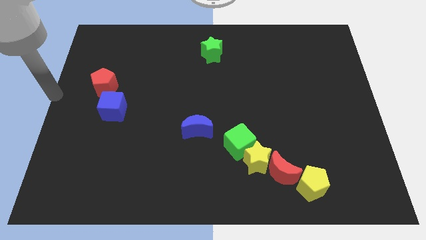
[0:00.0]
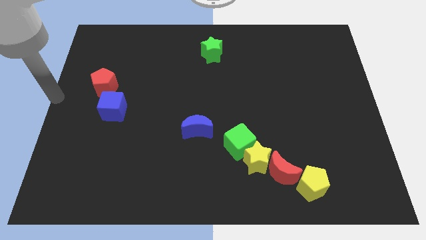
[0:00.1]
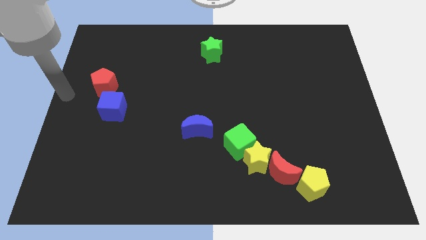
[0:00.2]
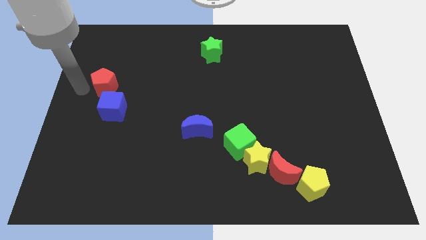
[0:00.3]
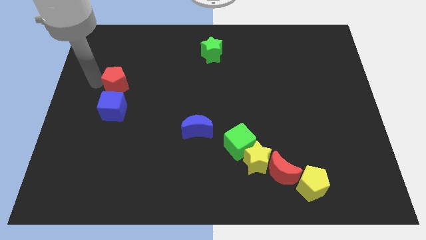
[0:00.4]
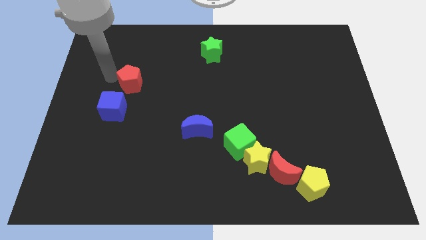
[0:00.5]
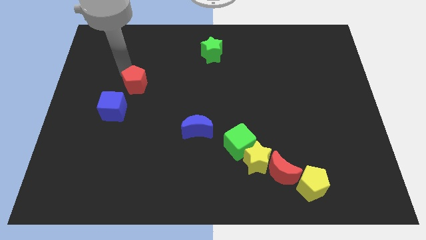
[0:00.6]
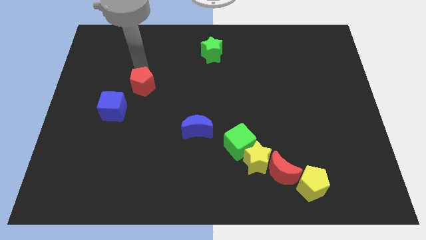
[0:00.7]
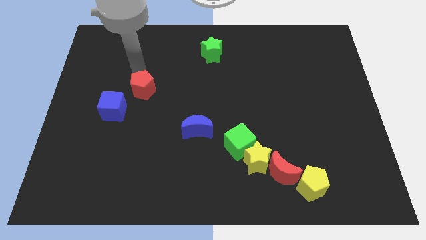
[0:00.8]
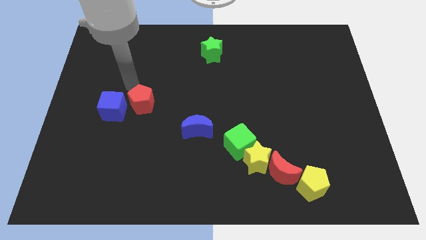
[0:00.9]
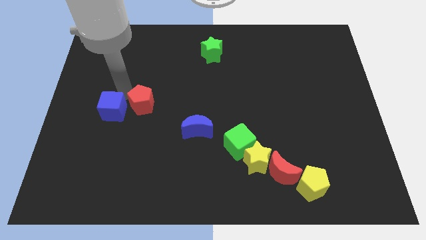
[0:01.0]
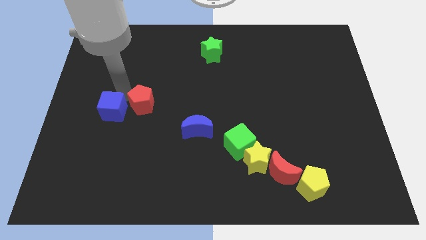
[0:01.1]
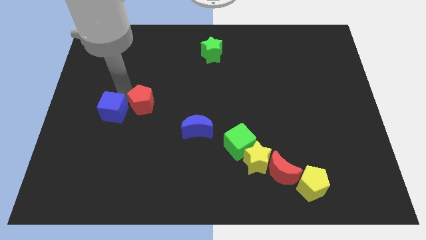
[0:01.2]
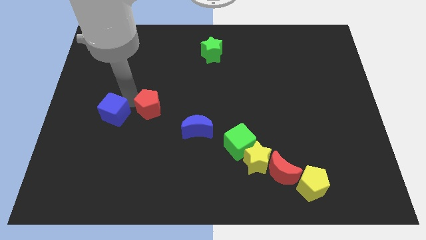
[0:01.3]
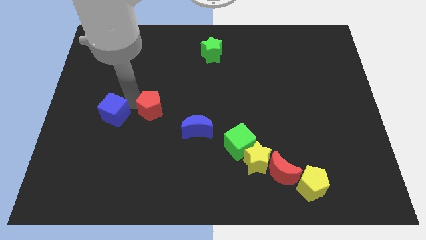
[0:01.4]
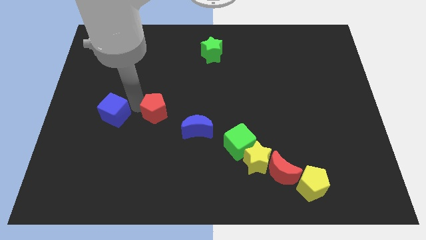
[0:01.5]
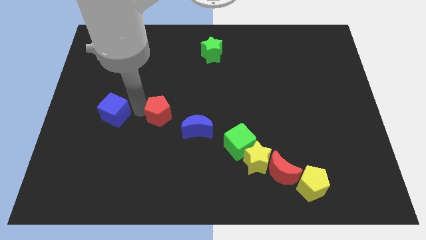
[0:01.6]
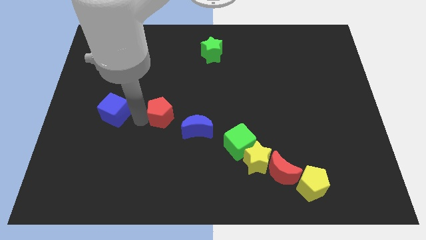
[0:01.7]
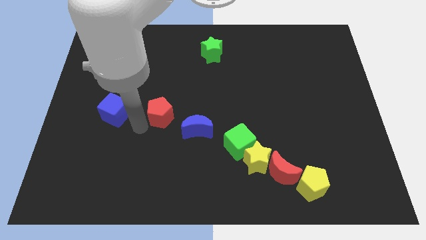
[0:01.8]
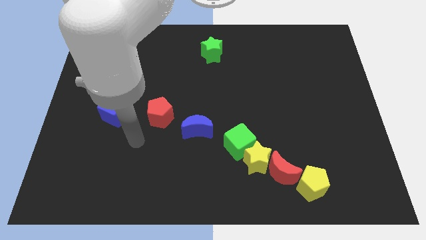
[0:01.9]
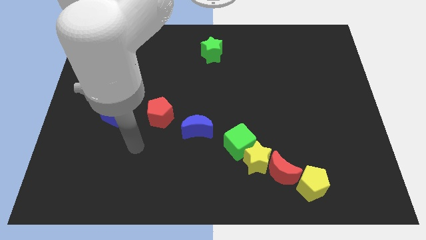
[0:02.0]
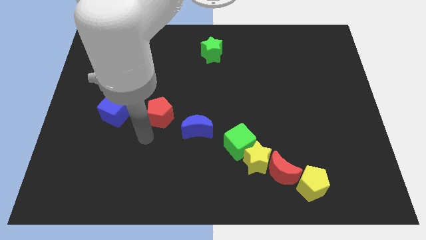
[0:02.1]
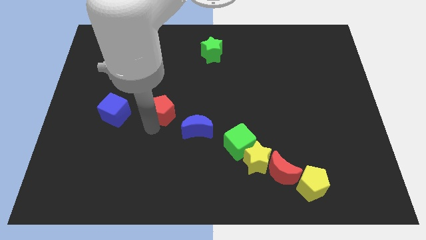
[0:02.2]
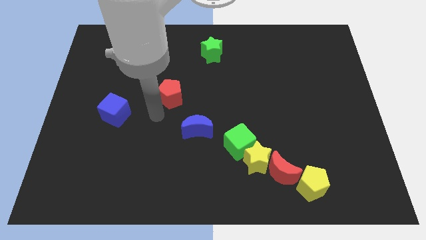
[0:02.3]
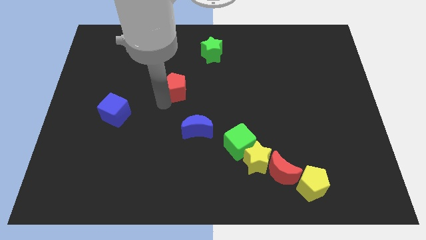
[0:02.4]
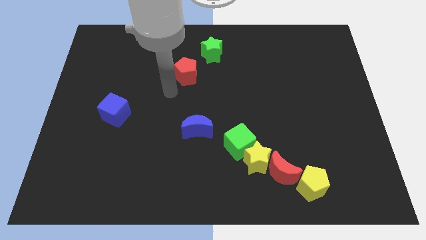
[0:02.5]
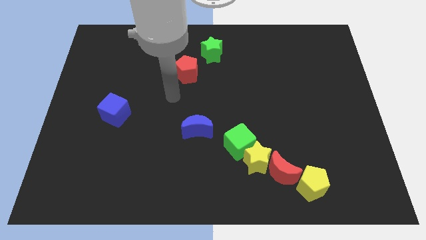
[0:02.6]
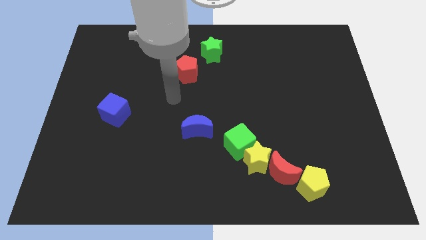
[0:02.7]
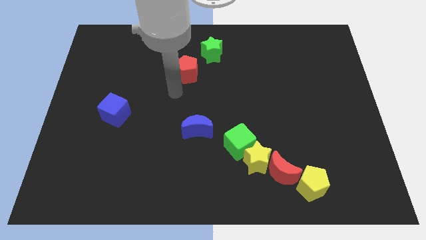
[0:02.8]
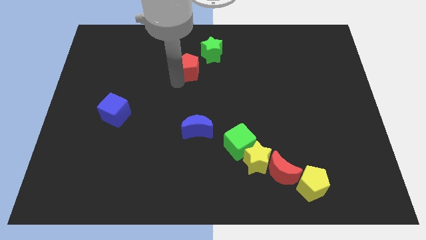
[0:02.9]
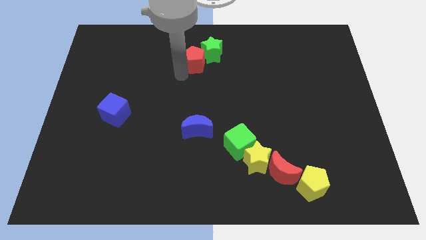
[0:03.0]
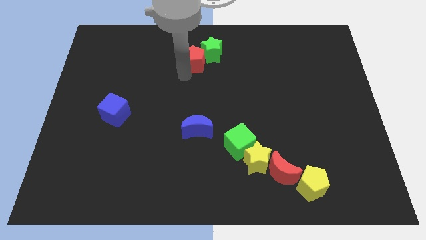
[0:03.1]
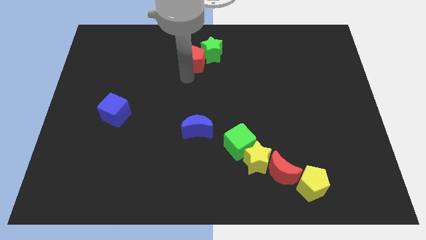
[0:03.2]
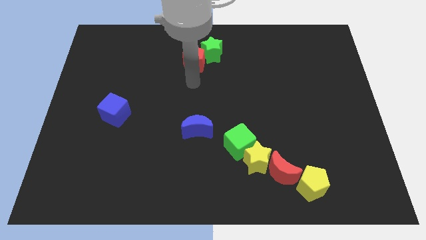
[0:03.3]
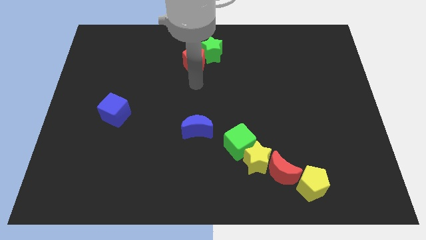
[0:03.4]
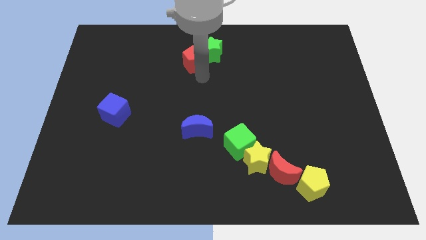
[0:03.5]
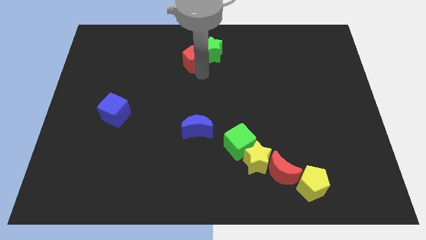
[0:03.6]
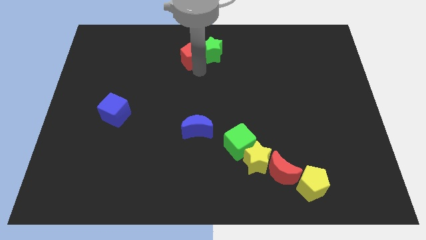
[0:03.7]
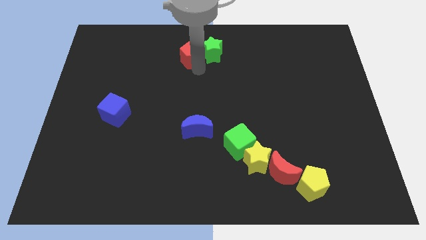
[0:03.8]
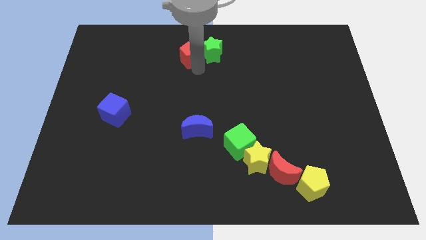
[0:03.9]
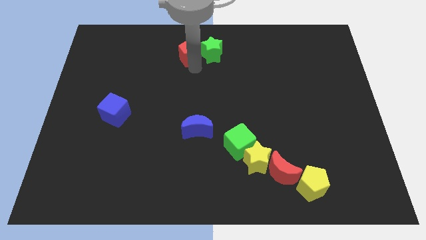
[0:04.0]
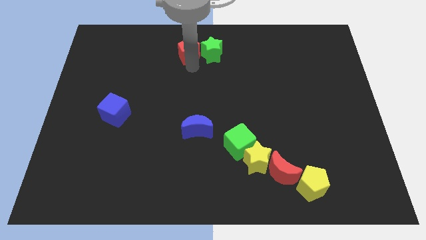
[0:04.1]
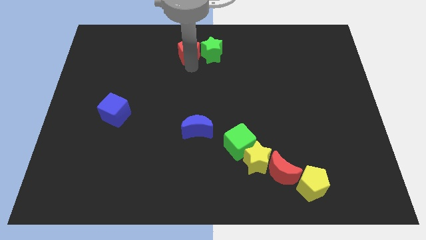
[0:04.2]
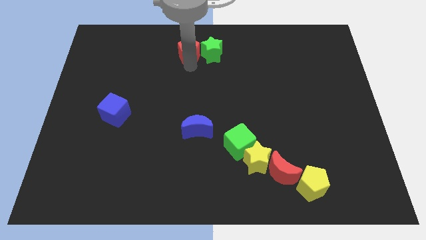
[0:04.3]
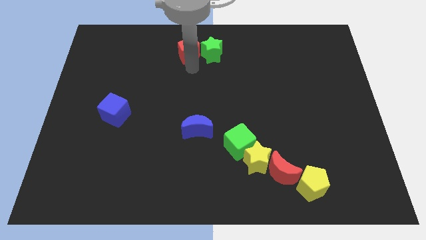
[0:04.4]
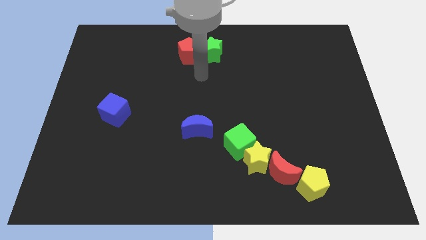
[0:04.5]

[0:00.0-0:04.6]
push the red pentagon to the left side of the green star

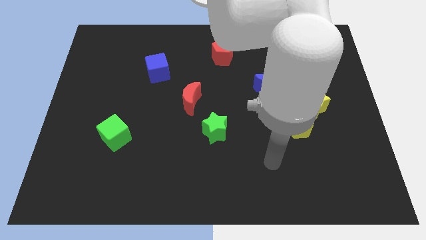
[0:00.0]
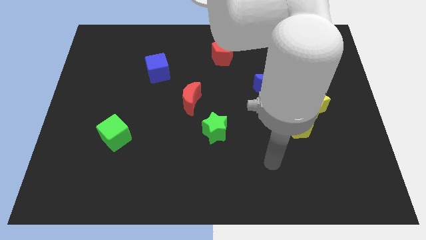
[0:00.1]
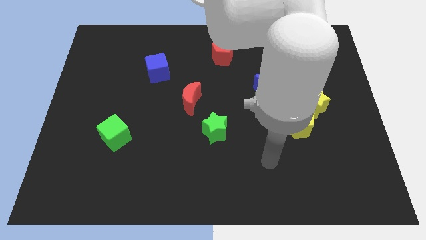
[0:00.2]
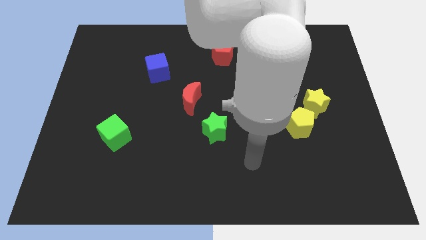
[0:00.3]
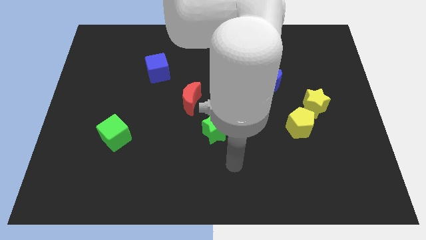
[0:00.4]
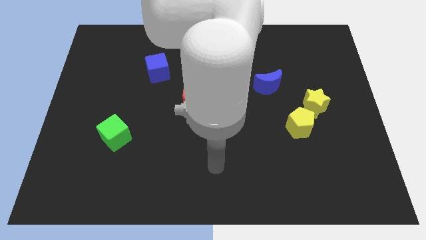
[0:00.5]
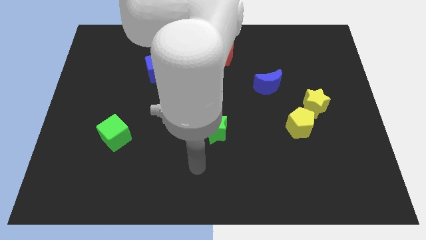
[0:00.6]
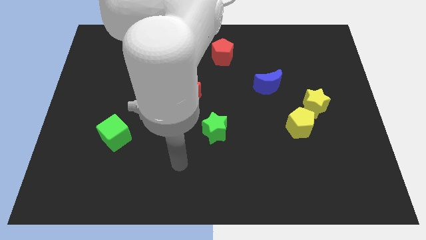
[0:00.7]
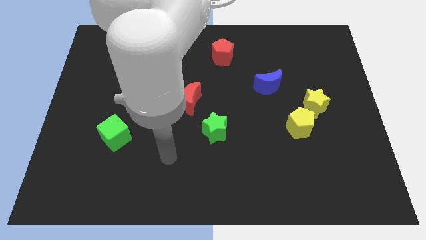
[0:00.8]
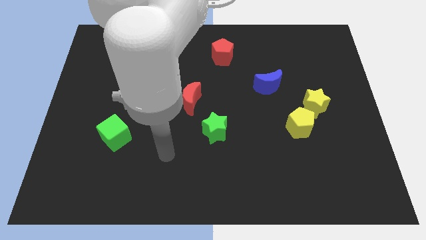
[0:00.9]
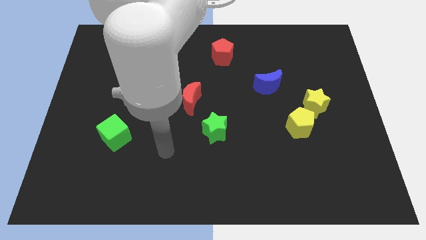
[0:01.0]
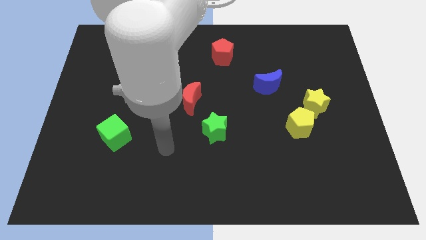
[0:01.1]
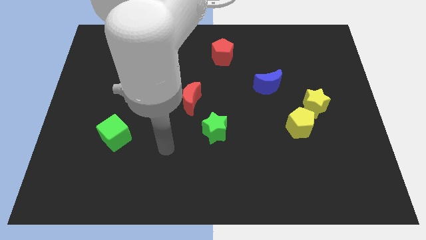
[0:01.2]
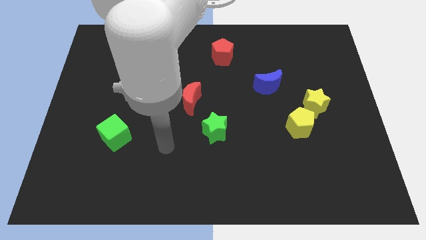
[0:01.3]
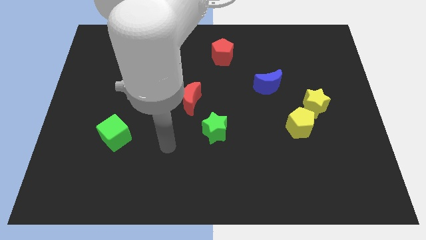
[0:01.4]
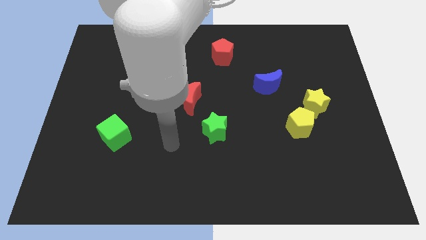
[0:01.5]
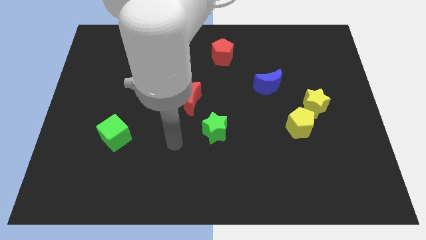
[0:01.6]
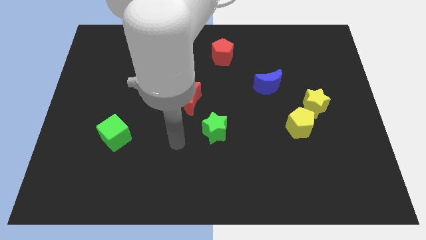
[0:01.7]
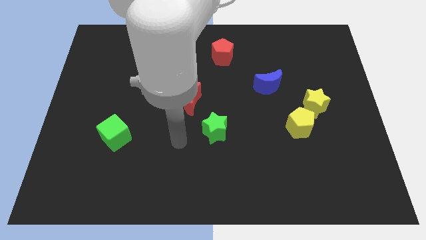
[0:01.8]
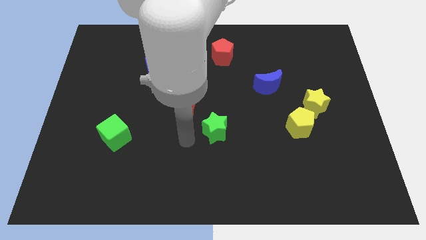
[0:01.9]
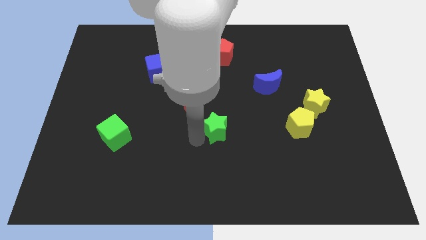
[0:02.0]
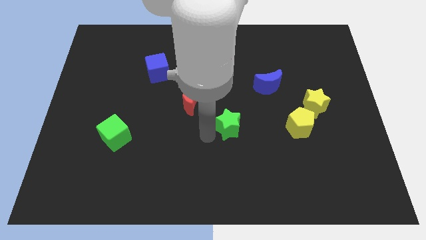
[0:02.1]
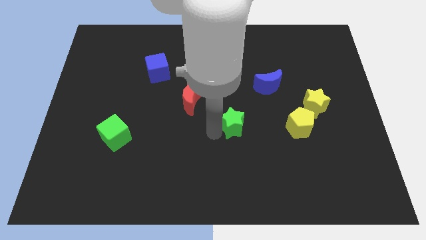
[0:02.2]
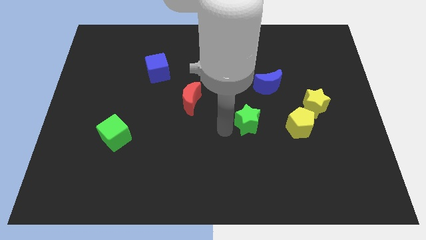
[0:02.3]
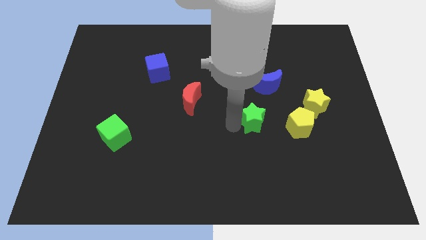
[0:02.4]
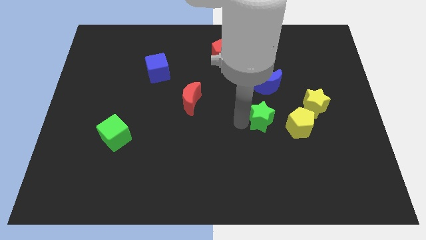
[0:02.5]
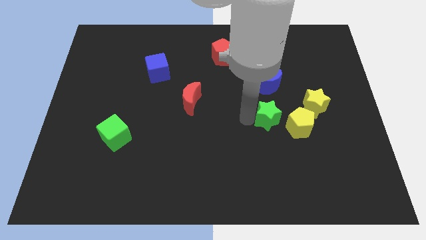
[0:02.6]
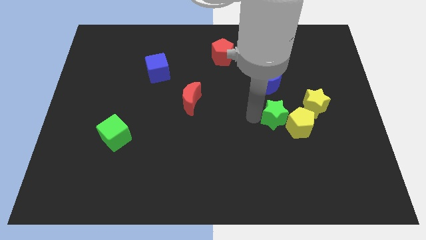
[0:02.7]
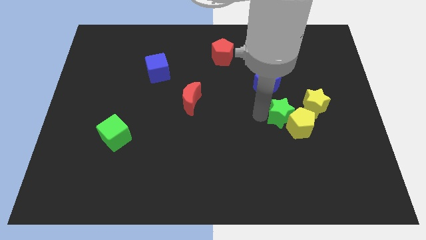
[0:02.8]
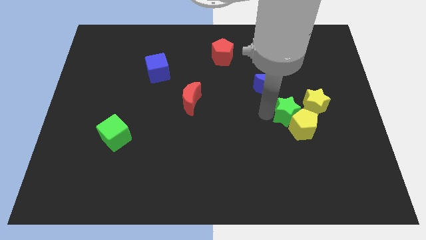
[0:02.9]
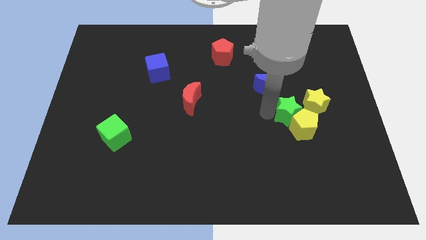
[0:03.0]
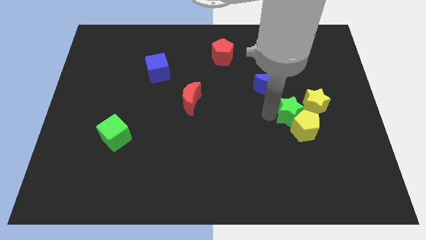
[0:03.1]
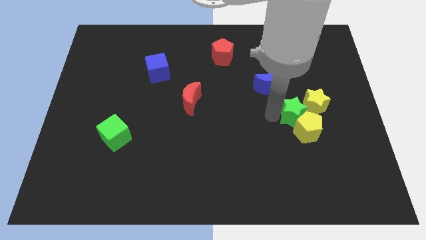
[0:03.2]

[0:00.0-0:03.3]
move the green star into yellow pentagon diagonally

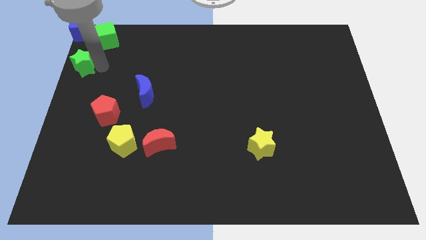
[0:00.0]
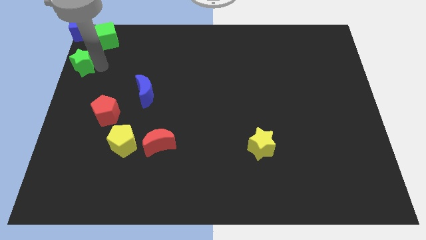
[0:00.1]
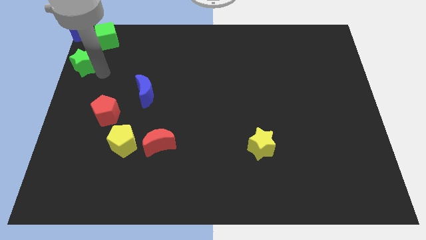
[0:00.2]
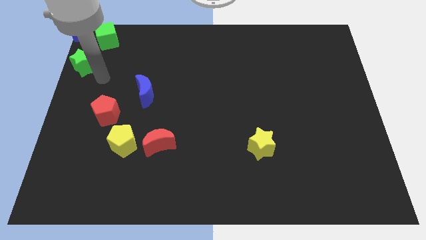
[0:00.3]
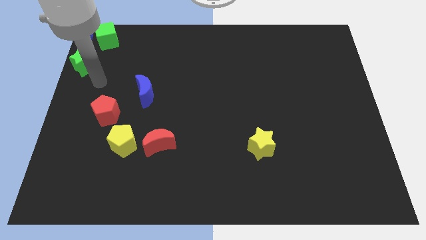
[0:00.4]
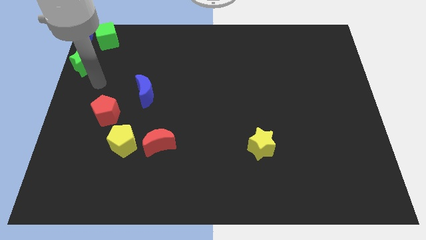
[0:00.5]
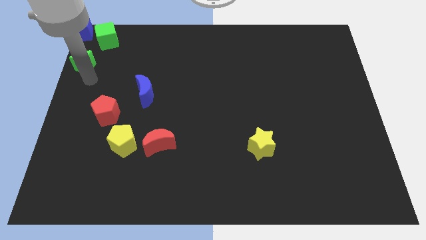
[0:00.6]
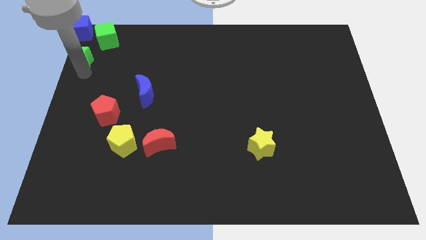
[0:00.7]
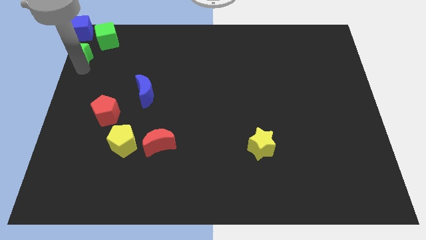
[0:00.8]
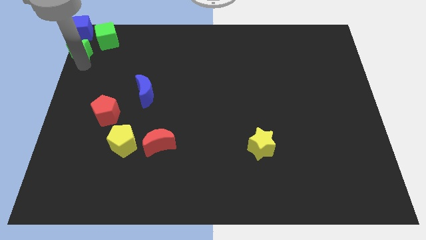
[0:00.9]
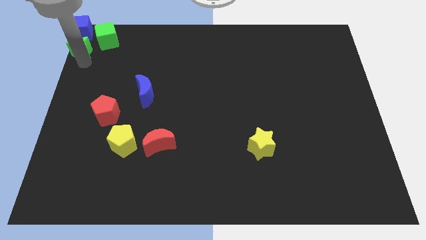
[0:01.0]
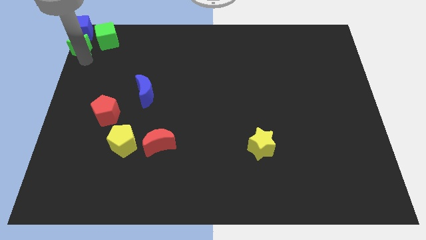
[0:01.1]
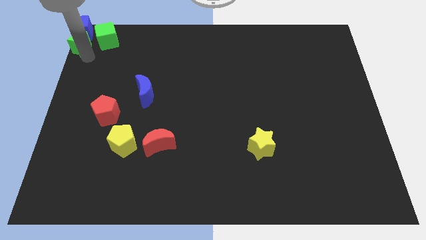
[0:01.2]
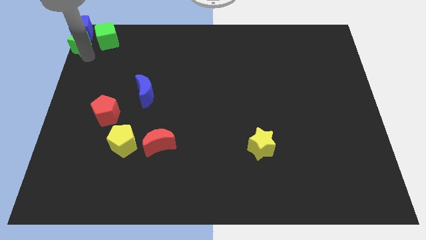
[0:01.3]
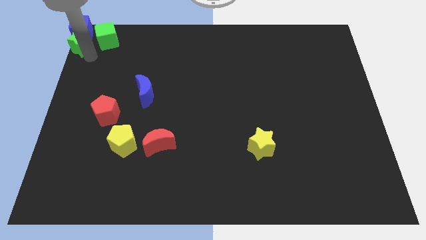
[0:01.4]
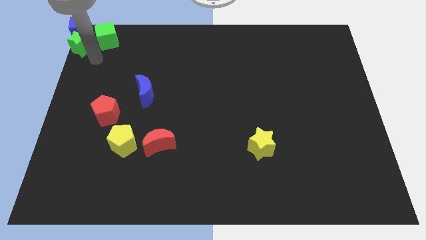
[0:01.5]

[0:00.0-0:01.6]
push the green star into the blue cube
